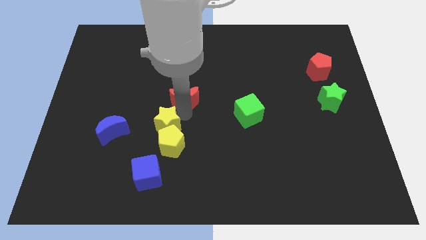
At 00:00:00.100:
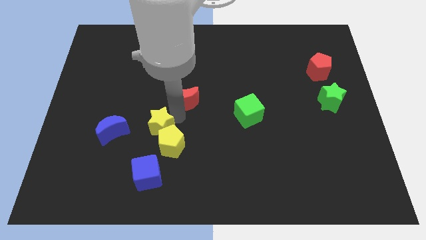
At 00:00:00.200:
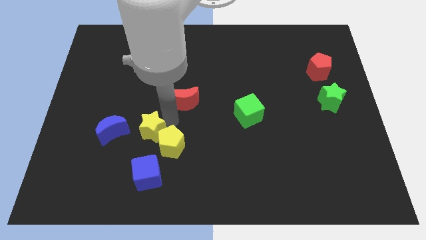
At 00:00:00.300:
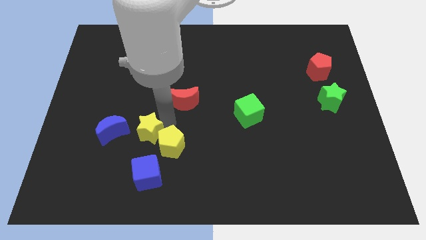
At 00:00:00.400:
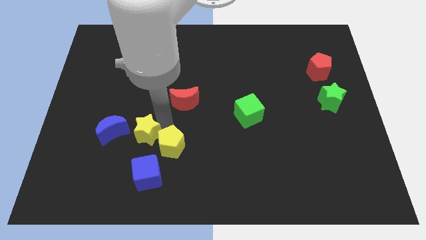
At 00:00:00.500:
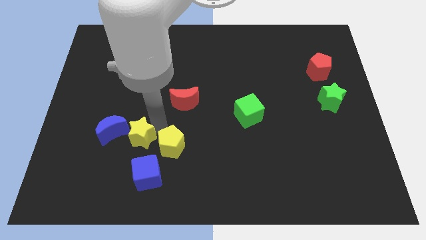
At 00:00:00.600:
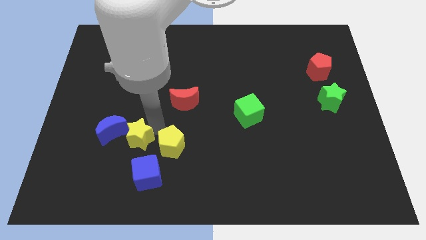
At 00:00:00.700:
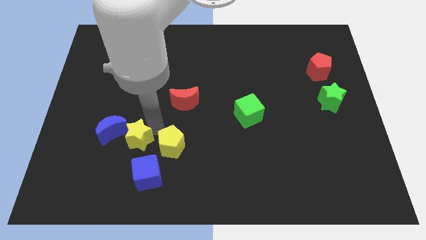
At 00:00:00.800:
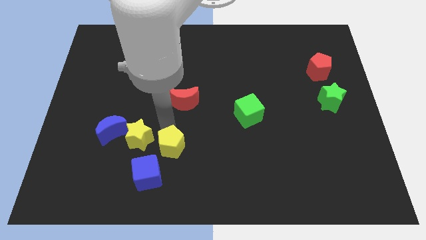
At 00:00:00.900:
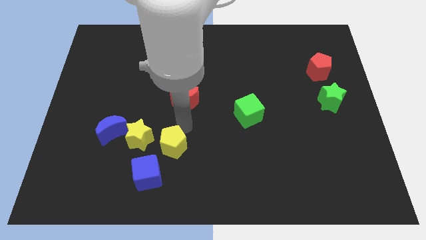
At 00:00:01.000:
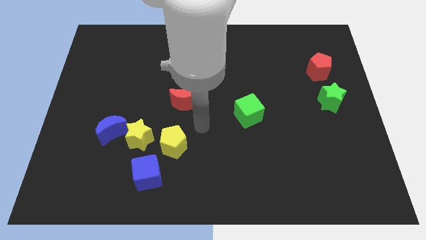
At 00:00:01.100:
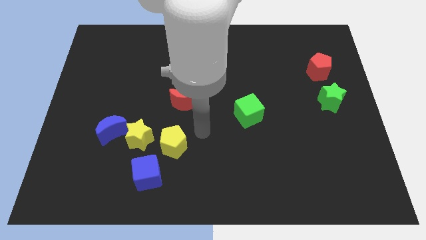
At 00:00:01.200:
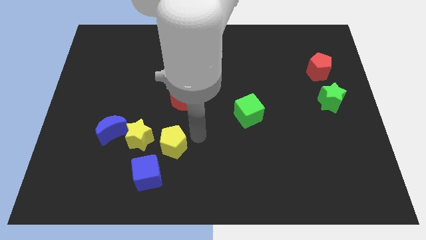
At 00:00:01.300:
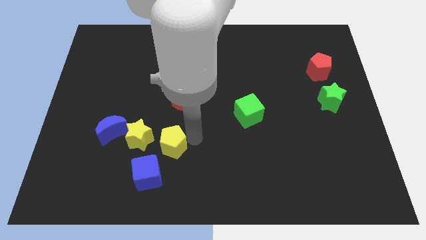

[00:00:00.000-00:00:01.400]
place the yellow star to the left of the yellow pentagon

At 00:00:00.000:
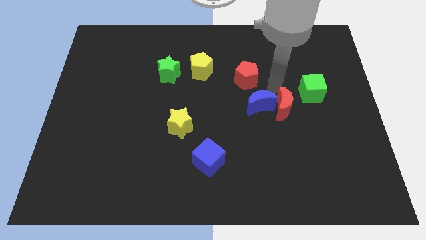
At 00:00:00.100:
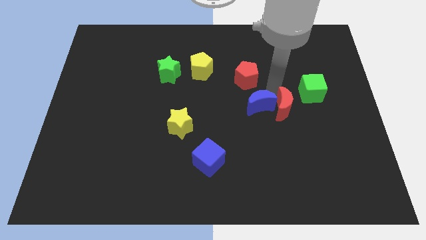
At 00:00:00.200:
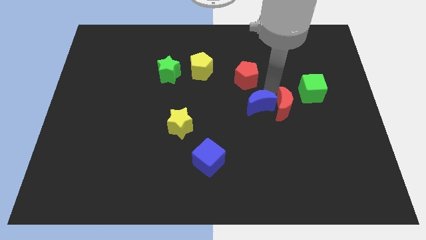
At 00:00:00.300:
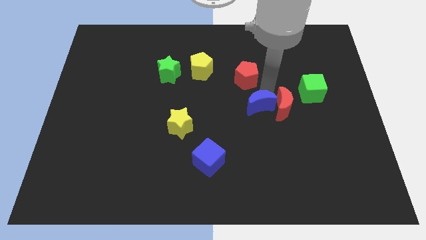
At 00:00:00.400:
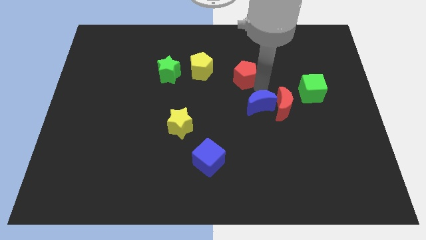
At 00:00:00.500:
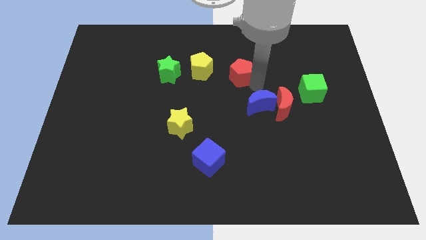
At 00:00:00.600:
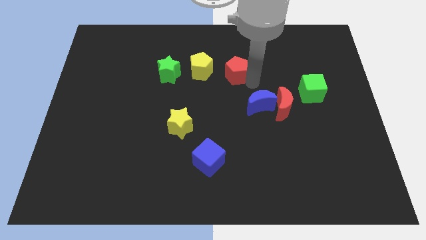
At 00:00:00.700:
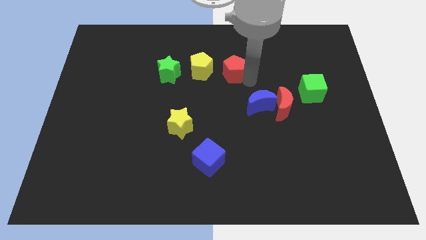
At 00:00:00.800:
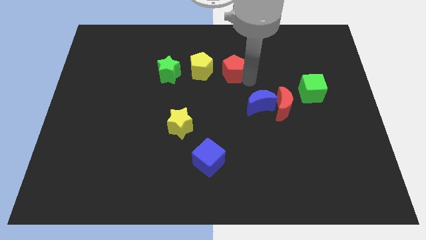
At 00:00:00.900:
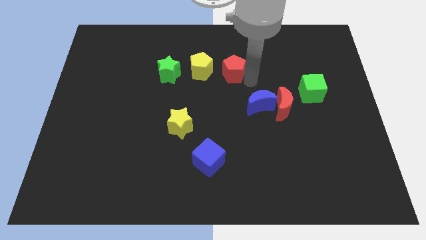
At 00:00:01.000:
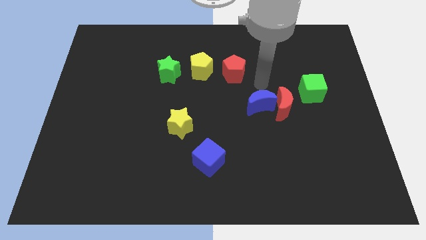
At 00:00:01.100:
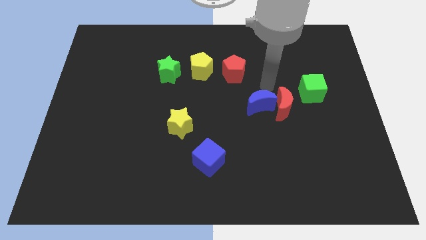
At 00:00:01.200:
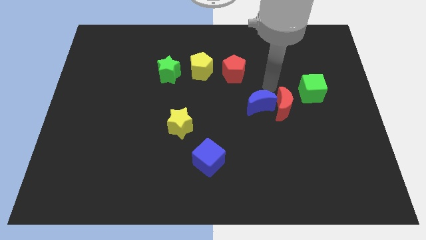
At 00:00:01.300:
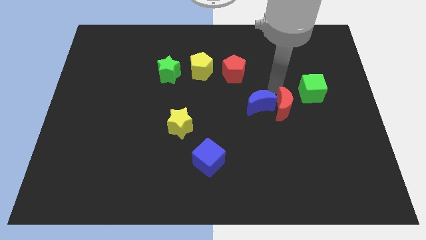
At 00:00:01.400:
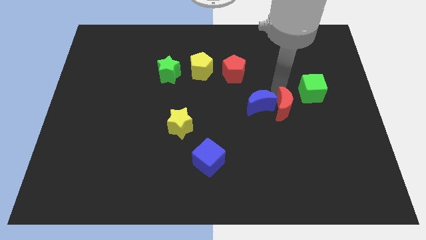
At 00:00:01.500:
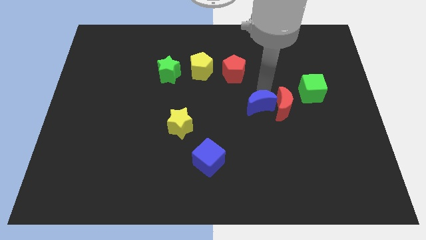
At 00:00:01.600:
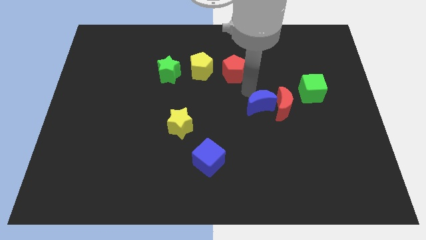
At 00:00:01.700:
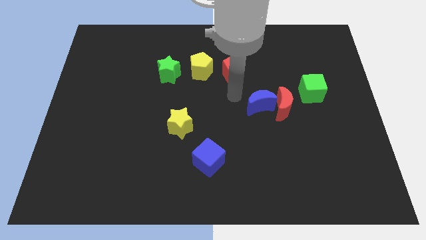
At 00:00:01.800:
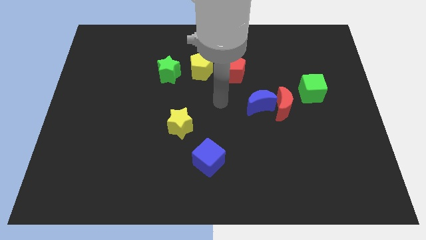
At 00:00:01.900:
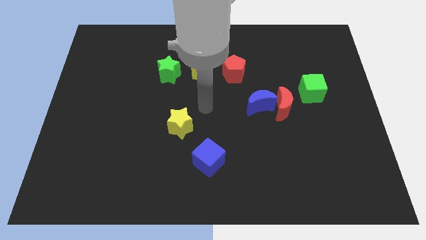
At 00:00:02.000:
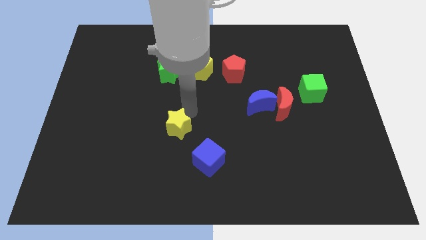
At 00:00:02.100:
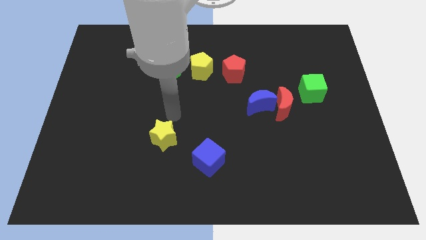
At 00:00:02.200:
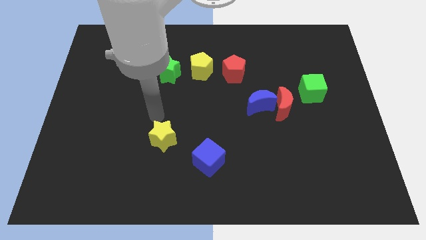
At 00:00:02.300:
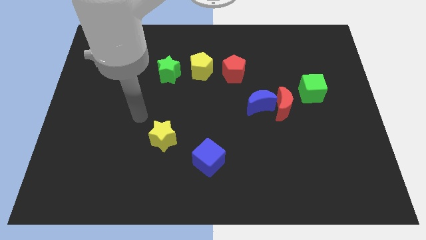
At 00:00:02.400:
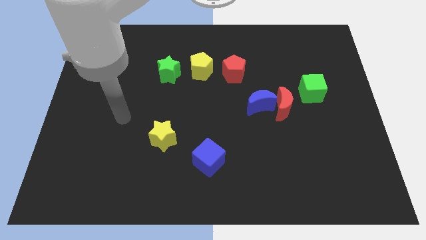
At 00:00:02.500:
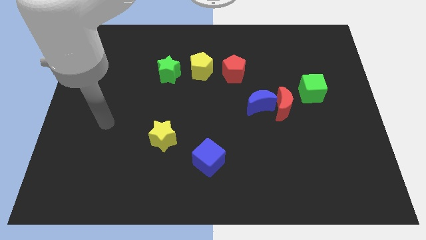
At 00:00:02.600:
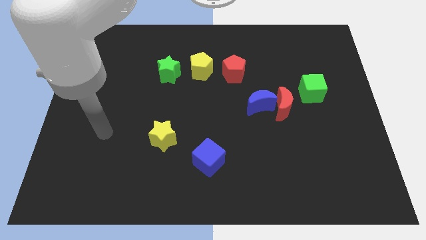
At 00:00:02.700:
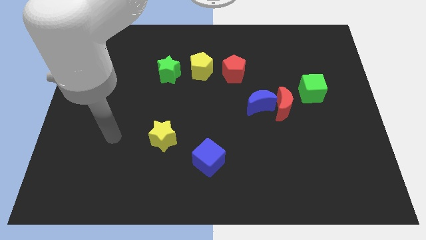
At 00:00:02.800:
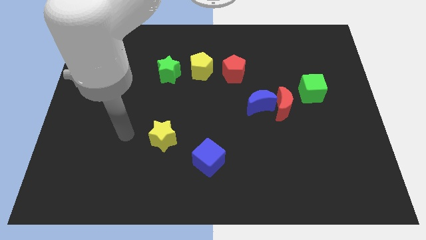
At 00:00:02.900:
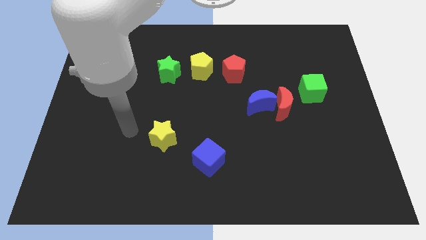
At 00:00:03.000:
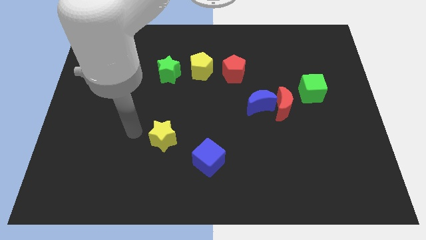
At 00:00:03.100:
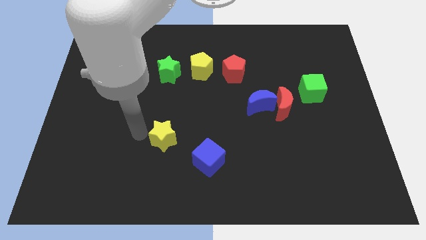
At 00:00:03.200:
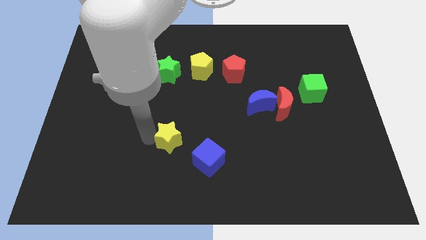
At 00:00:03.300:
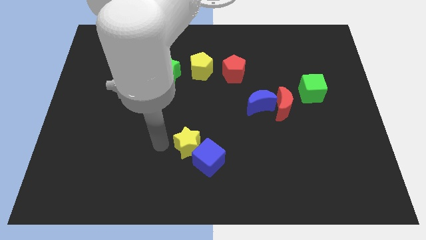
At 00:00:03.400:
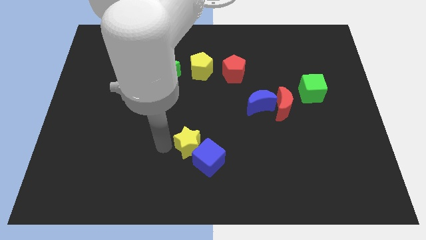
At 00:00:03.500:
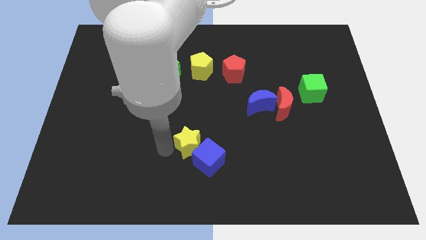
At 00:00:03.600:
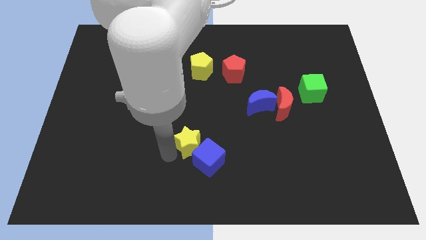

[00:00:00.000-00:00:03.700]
move the yellow star diagonal left of the blue cube

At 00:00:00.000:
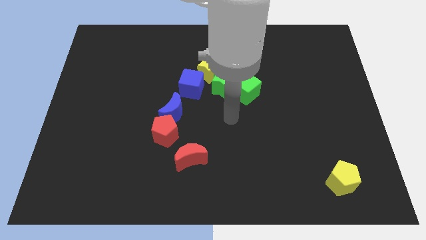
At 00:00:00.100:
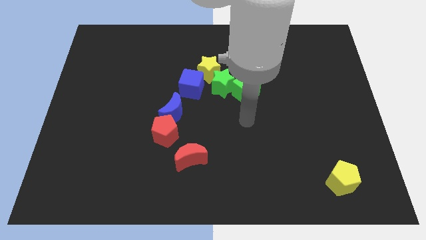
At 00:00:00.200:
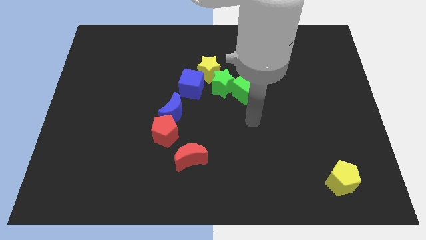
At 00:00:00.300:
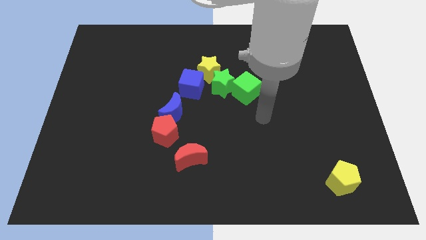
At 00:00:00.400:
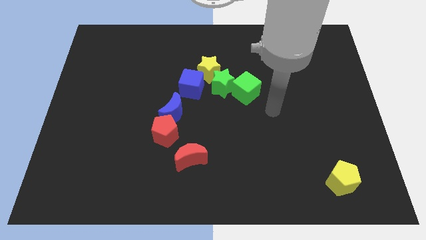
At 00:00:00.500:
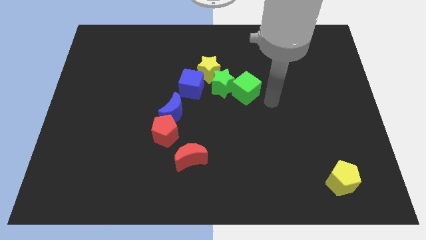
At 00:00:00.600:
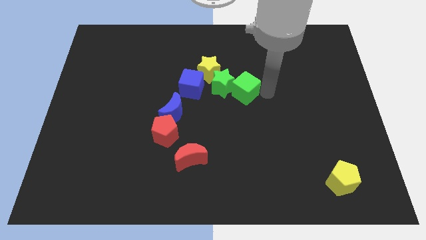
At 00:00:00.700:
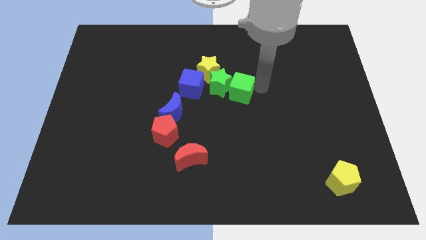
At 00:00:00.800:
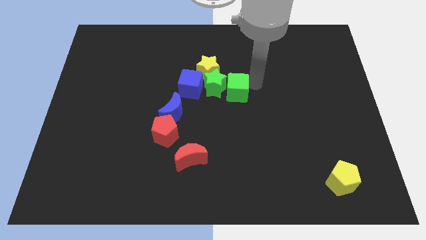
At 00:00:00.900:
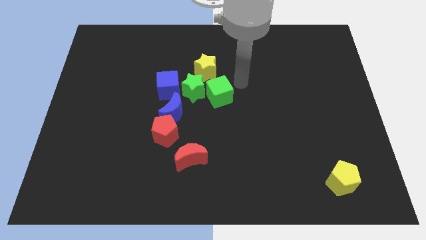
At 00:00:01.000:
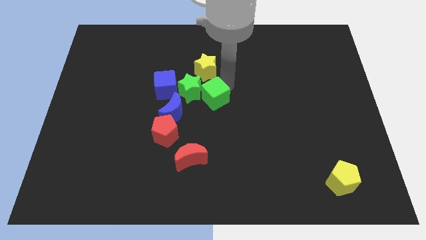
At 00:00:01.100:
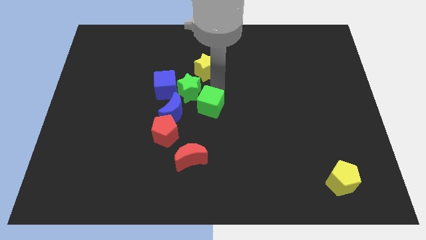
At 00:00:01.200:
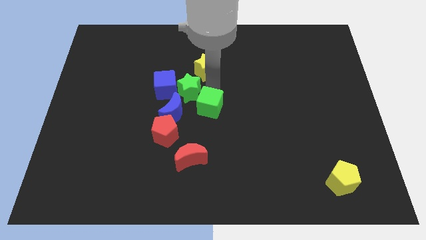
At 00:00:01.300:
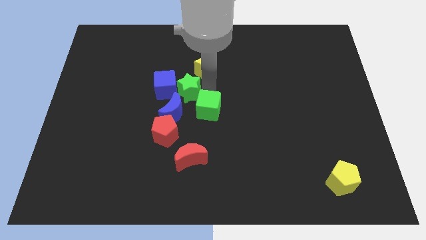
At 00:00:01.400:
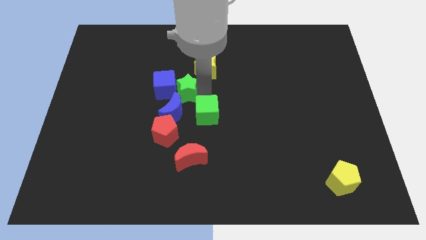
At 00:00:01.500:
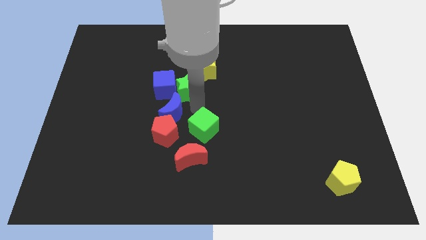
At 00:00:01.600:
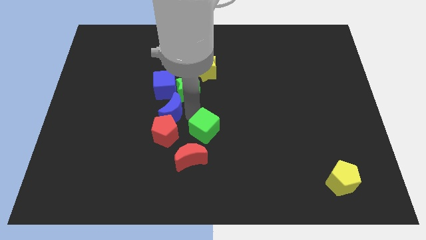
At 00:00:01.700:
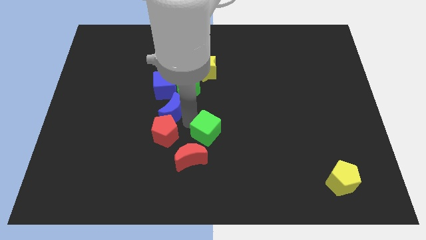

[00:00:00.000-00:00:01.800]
separate the green blocks at the center

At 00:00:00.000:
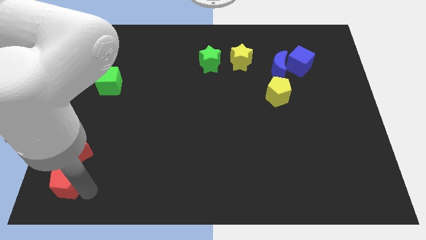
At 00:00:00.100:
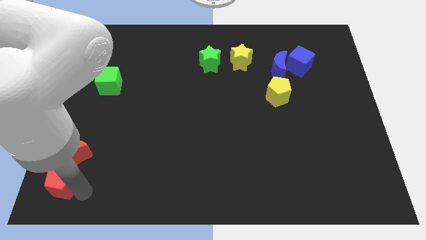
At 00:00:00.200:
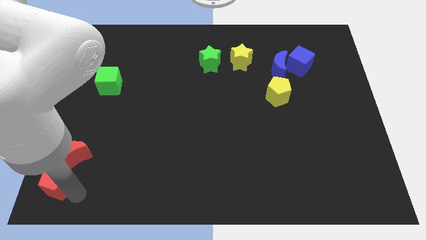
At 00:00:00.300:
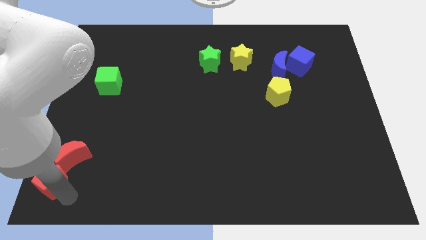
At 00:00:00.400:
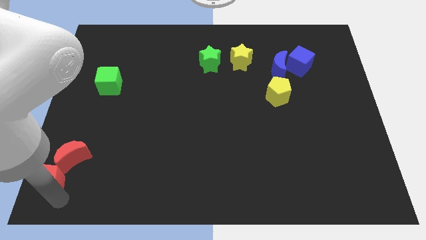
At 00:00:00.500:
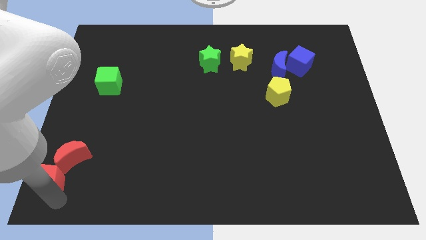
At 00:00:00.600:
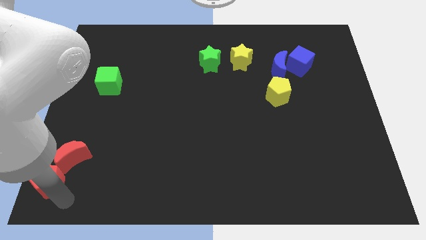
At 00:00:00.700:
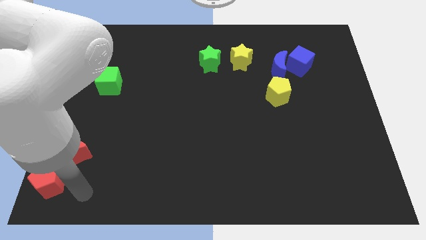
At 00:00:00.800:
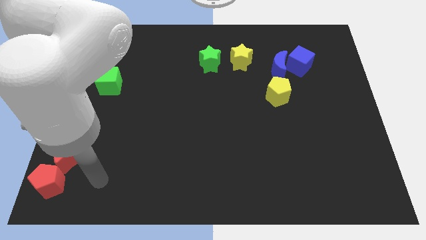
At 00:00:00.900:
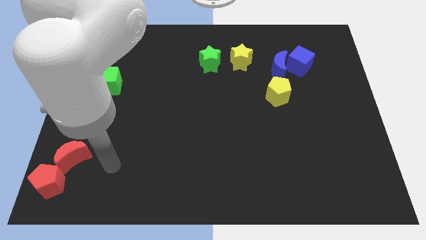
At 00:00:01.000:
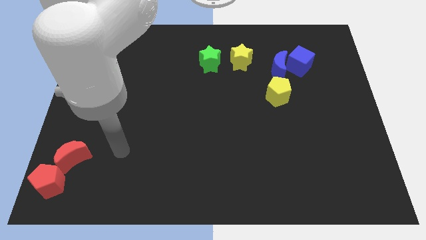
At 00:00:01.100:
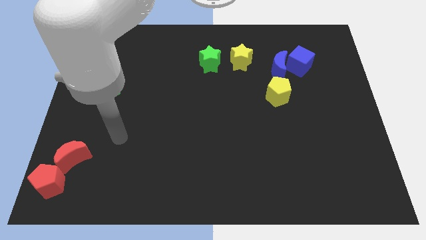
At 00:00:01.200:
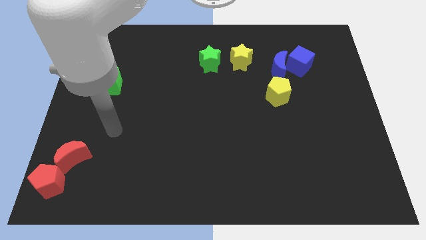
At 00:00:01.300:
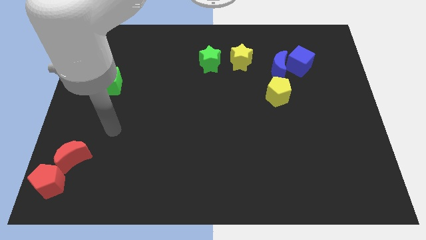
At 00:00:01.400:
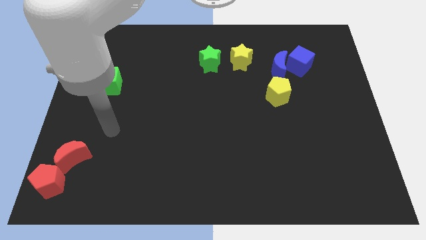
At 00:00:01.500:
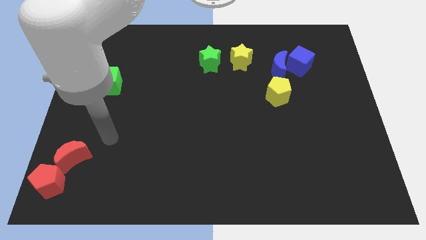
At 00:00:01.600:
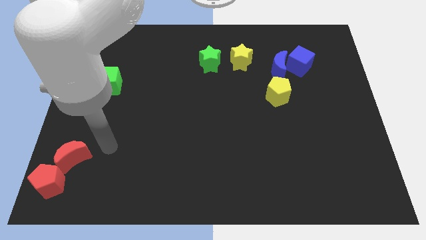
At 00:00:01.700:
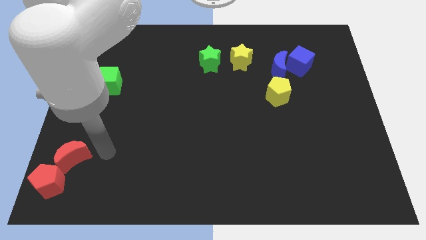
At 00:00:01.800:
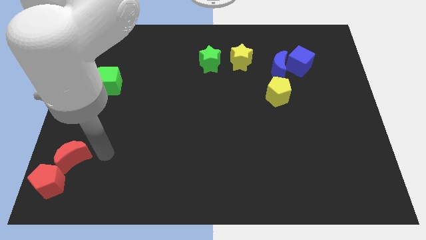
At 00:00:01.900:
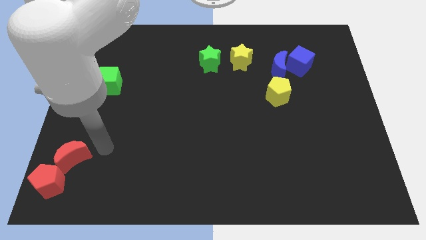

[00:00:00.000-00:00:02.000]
place the red pentagon below the red moon
